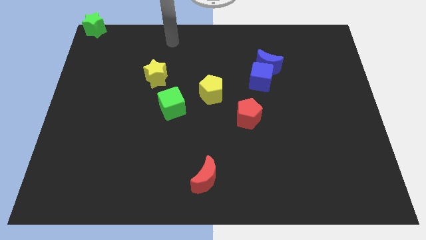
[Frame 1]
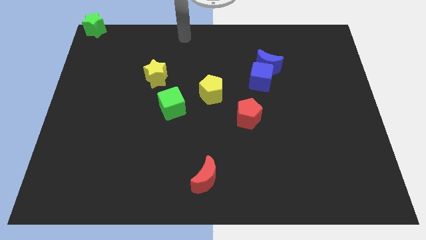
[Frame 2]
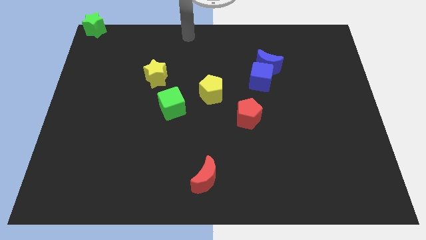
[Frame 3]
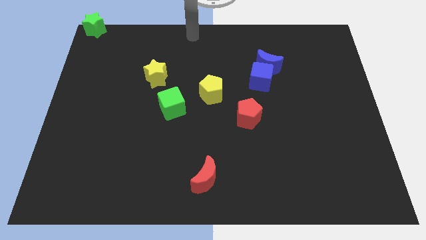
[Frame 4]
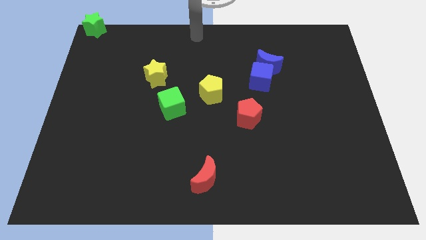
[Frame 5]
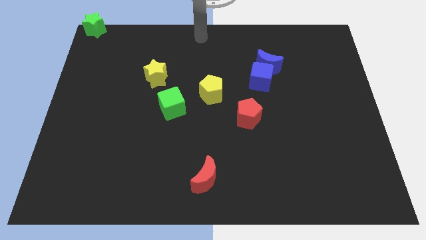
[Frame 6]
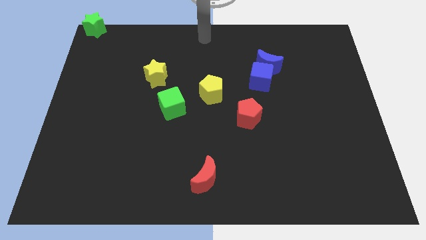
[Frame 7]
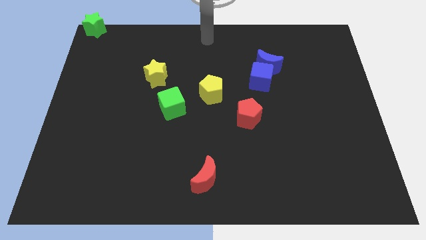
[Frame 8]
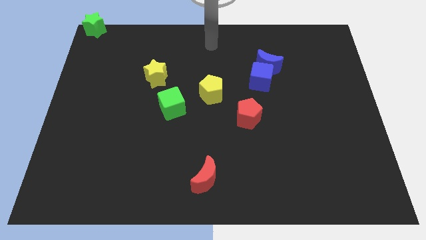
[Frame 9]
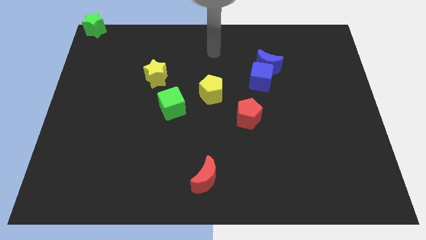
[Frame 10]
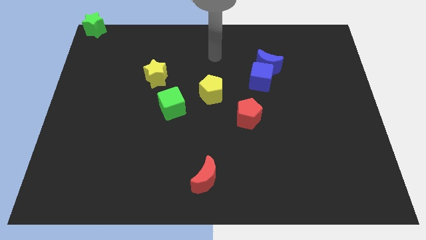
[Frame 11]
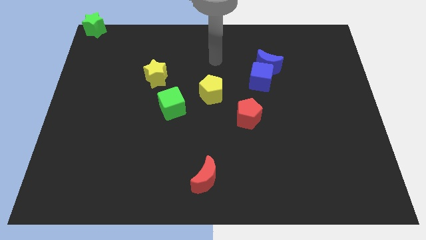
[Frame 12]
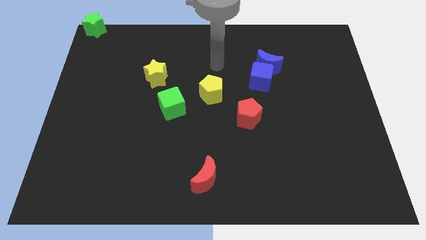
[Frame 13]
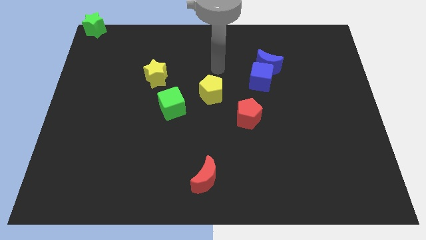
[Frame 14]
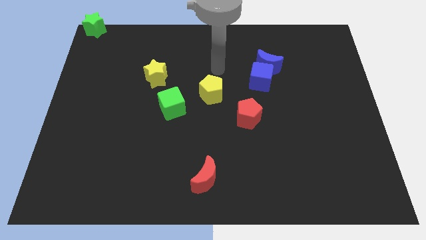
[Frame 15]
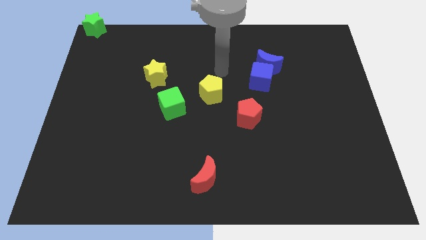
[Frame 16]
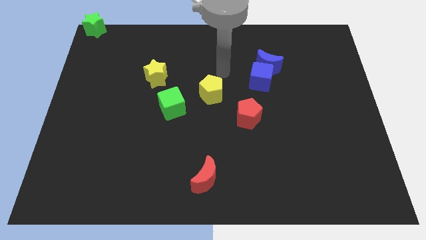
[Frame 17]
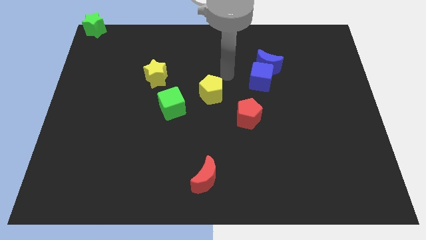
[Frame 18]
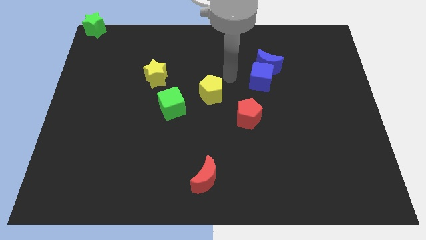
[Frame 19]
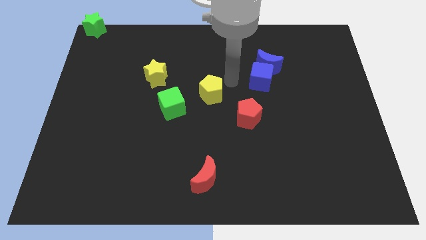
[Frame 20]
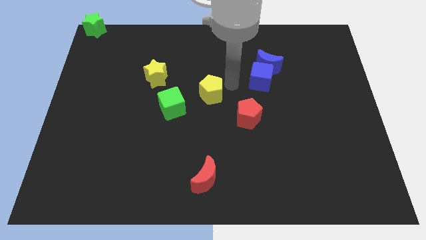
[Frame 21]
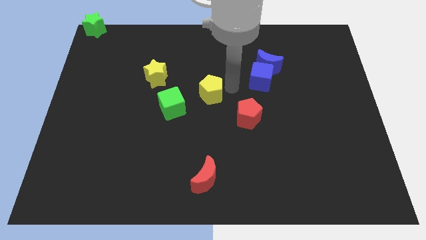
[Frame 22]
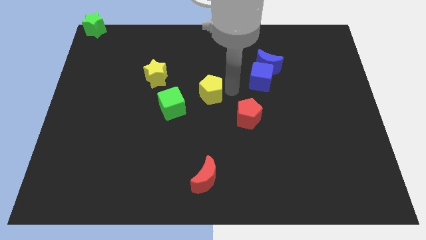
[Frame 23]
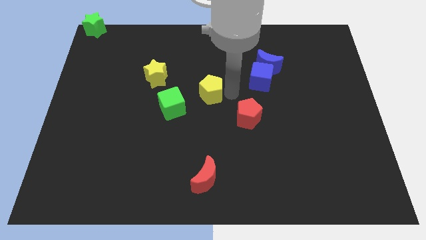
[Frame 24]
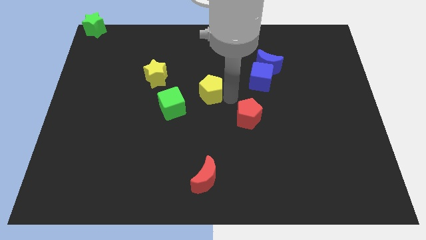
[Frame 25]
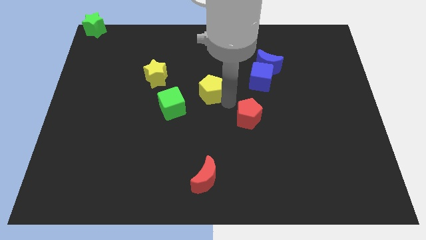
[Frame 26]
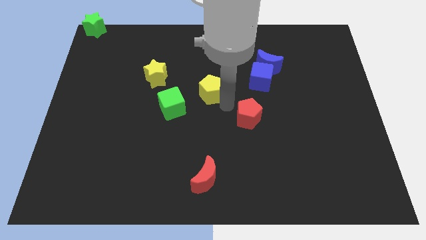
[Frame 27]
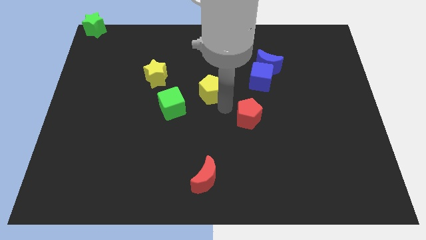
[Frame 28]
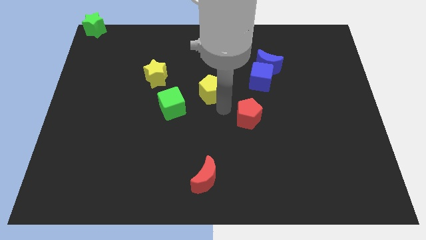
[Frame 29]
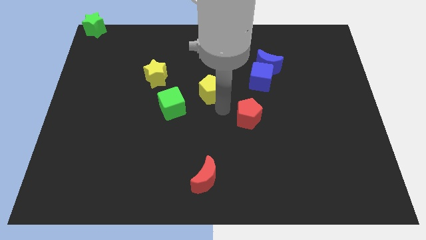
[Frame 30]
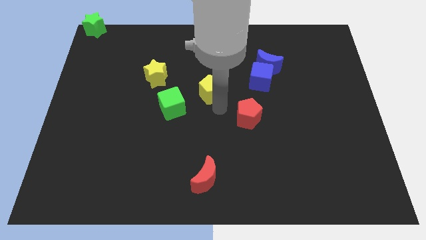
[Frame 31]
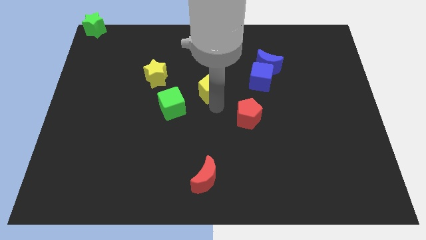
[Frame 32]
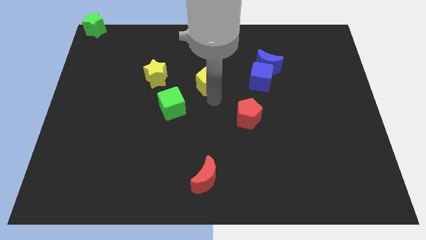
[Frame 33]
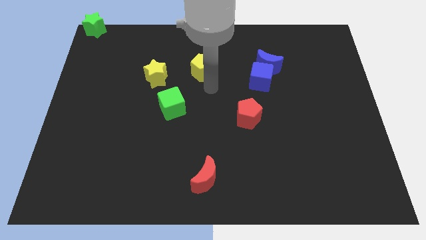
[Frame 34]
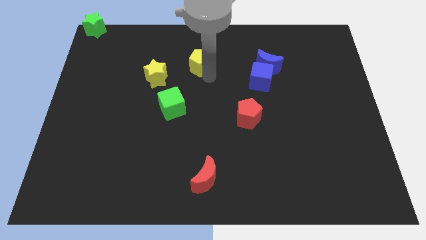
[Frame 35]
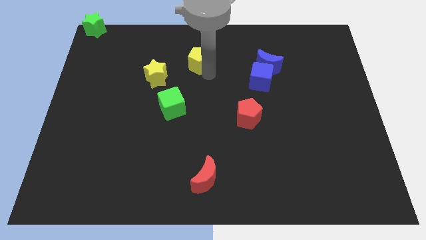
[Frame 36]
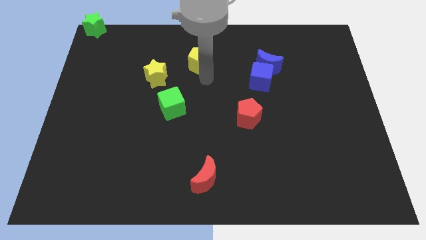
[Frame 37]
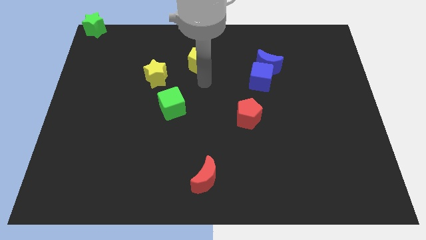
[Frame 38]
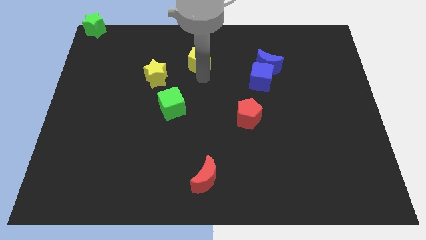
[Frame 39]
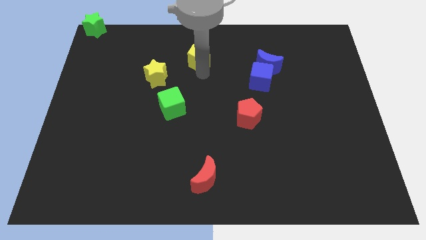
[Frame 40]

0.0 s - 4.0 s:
move the yellow pentagon slightly to the top of the board

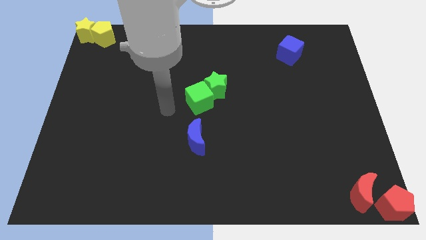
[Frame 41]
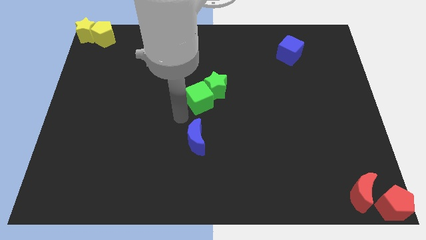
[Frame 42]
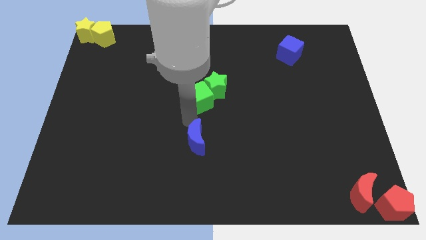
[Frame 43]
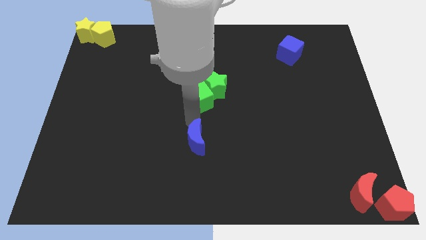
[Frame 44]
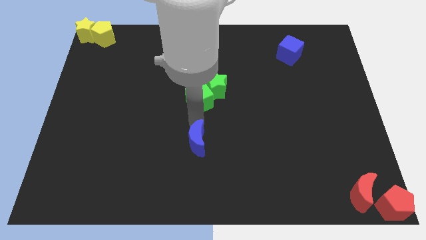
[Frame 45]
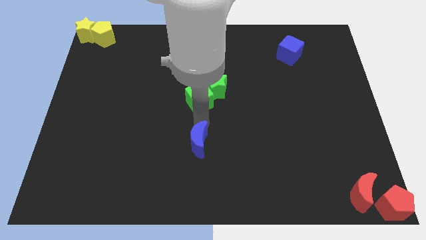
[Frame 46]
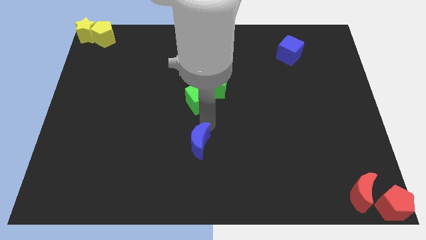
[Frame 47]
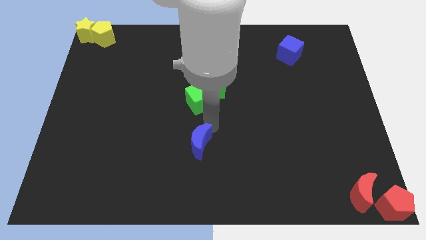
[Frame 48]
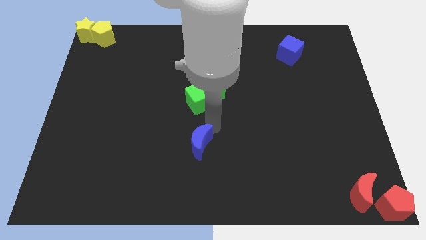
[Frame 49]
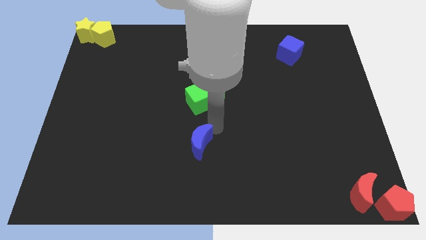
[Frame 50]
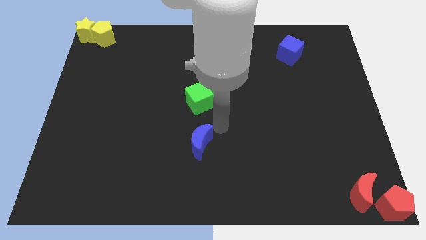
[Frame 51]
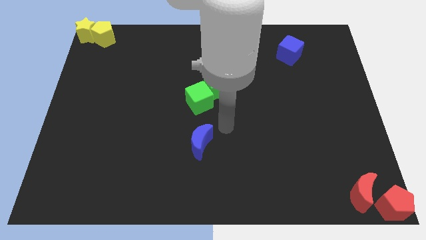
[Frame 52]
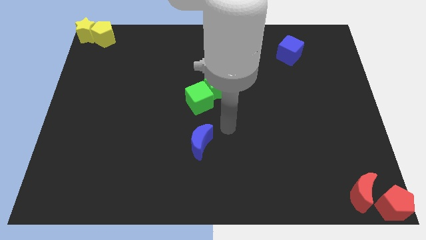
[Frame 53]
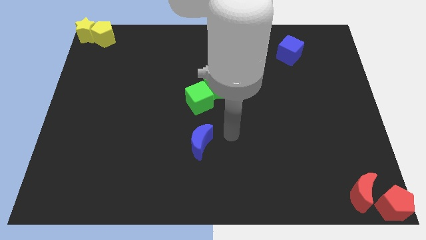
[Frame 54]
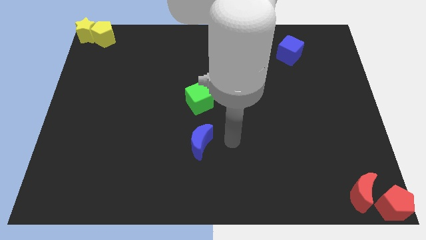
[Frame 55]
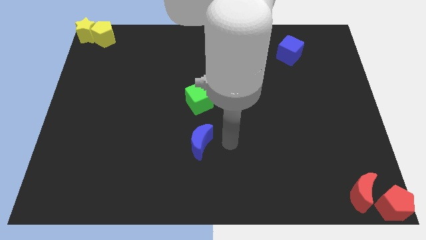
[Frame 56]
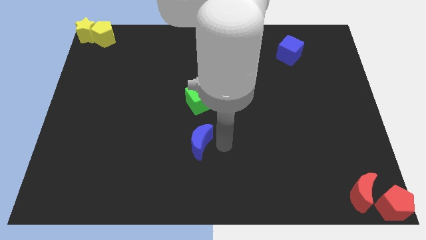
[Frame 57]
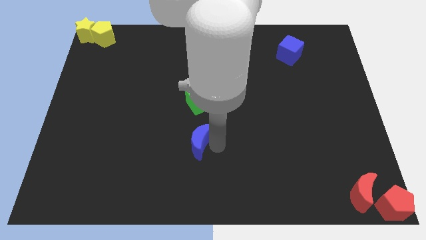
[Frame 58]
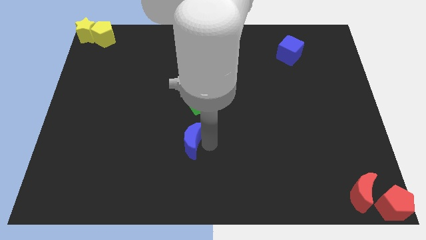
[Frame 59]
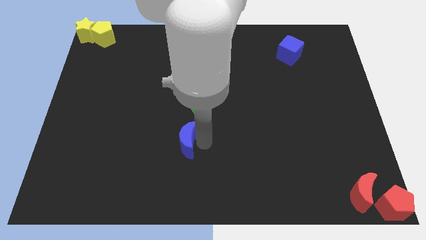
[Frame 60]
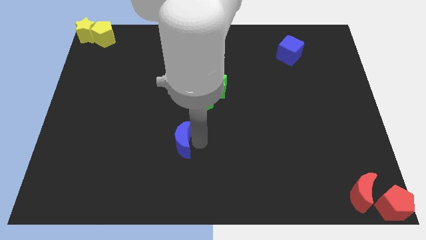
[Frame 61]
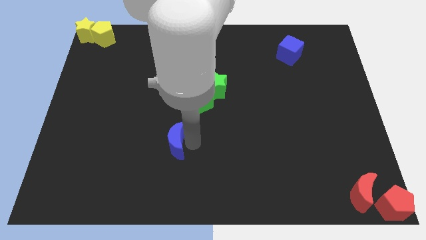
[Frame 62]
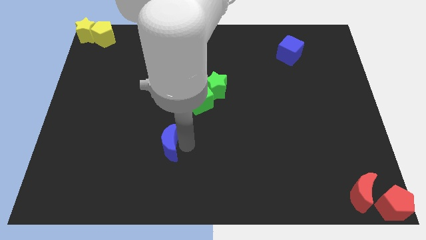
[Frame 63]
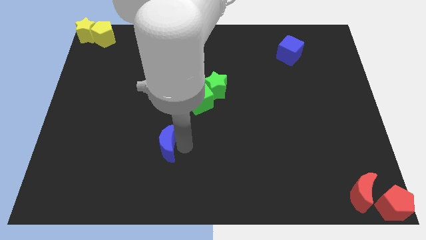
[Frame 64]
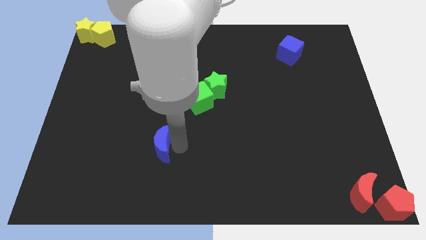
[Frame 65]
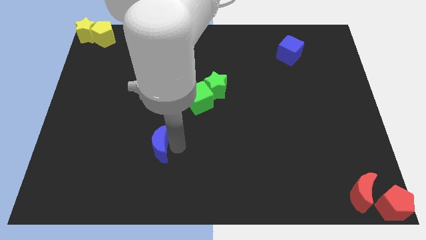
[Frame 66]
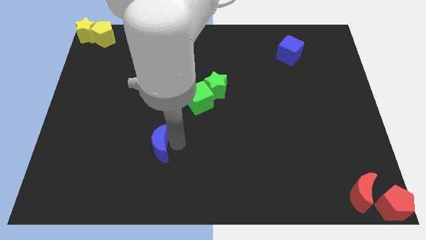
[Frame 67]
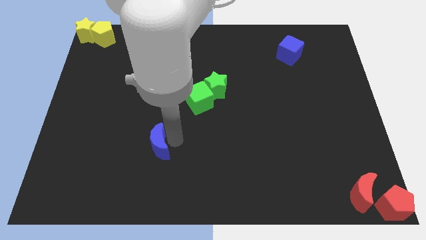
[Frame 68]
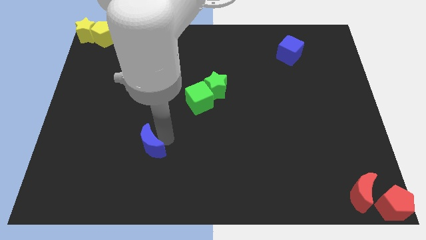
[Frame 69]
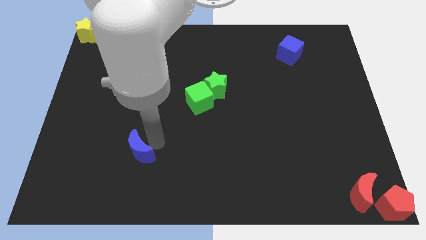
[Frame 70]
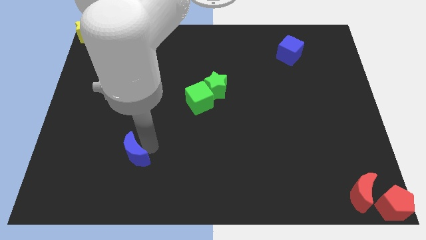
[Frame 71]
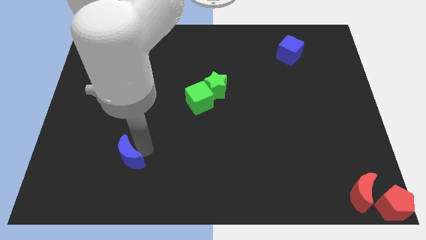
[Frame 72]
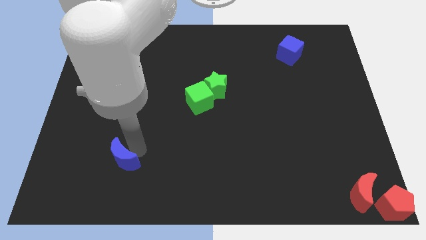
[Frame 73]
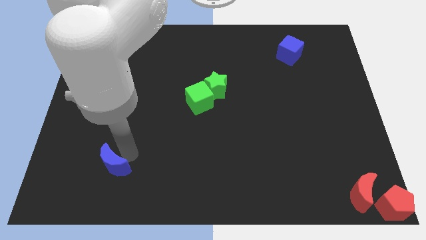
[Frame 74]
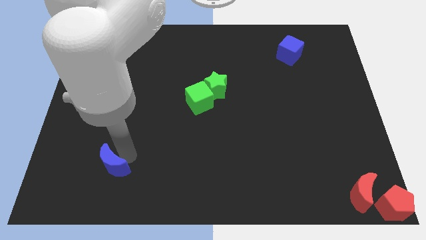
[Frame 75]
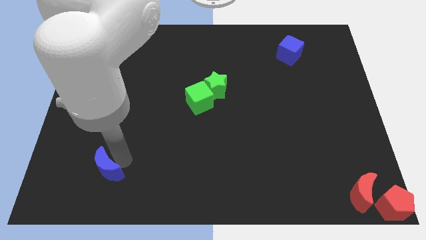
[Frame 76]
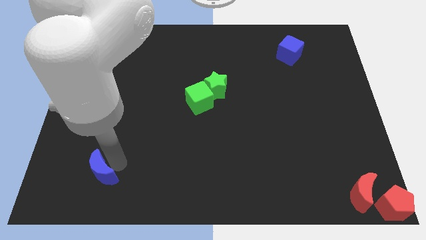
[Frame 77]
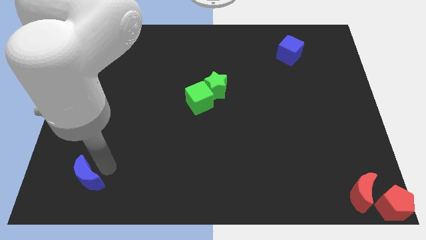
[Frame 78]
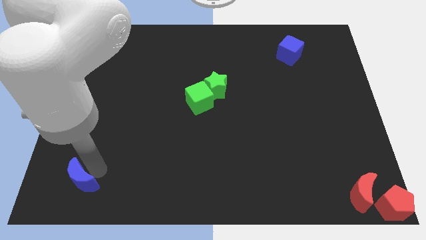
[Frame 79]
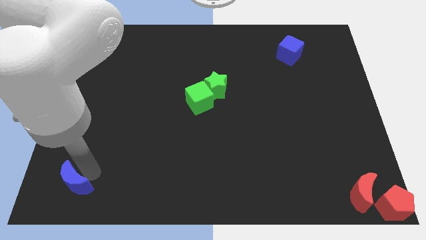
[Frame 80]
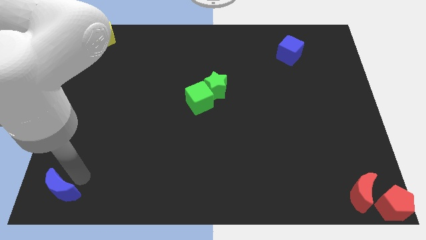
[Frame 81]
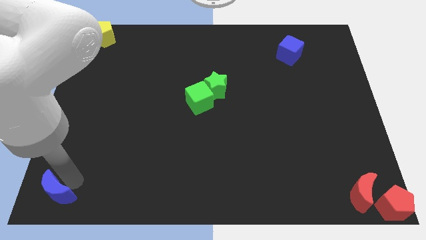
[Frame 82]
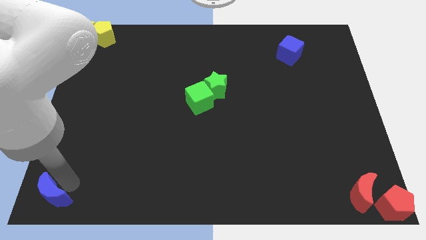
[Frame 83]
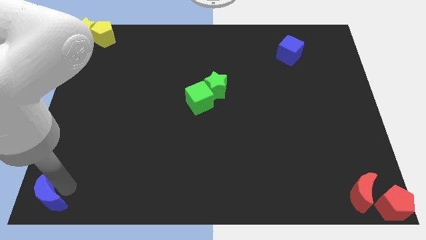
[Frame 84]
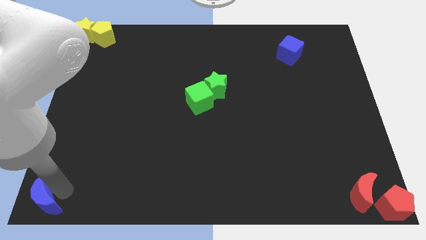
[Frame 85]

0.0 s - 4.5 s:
place the blue crescent at the bottom left corner of the board

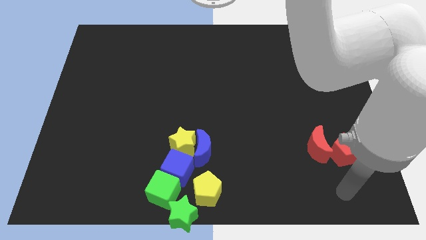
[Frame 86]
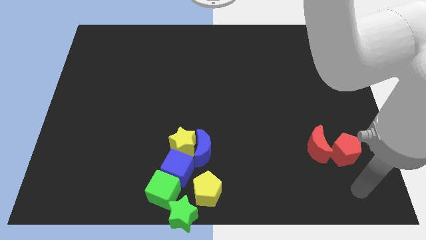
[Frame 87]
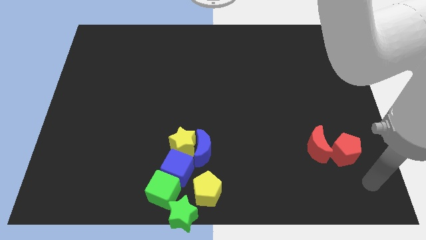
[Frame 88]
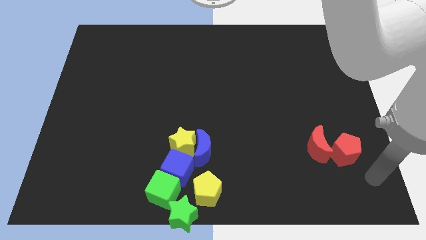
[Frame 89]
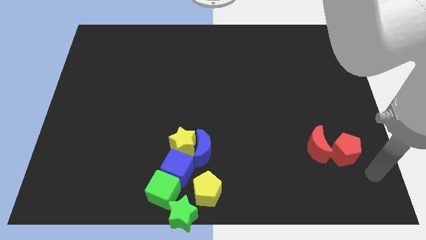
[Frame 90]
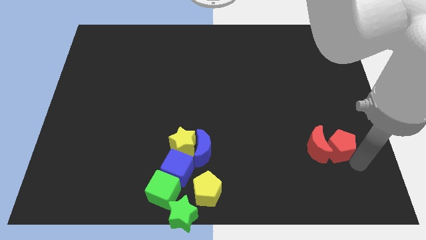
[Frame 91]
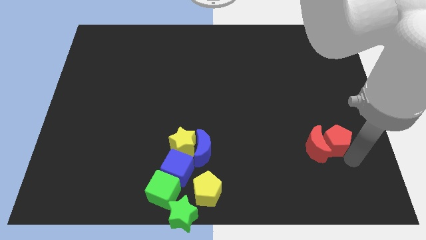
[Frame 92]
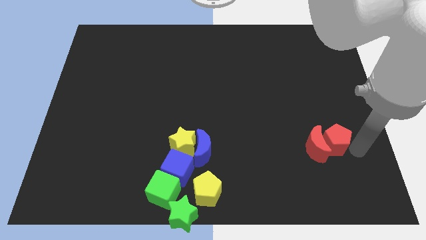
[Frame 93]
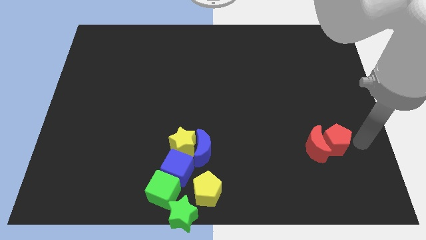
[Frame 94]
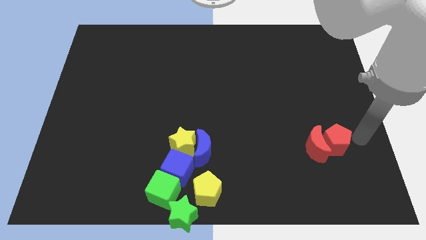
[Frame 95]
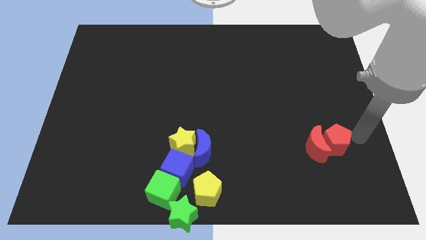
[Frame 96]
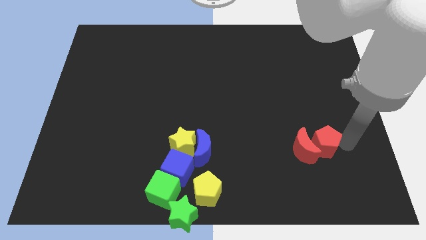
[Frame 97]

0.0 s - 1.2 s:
push the red pentagon into the red moon
